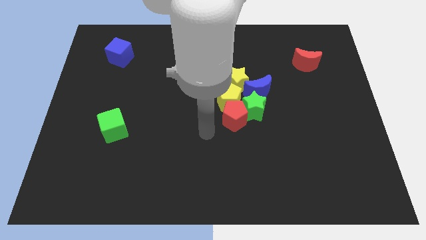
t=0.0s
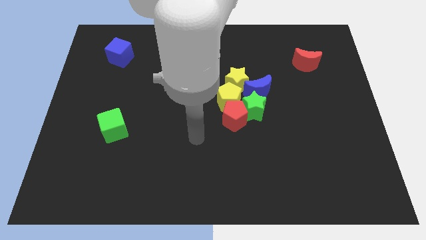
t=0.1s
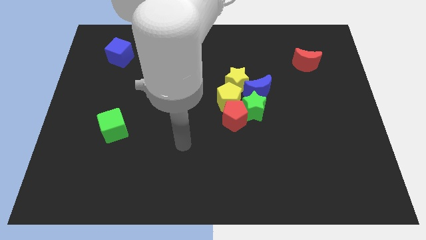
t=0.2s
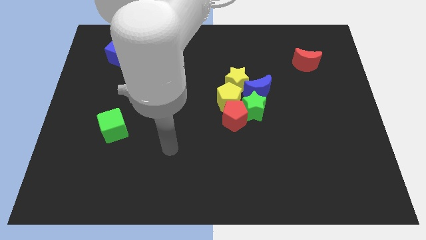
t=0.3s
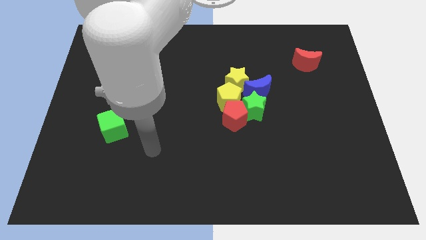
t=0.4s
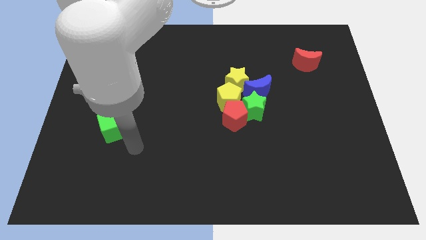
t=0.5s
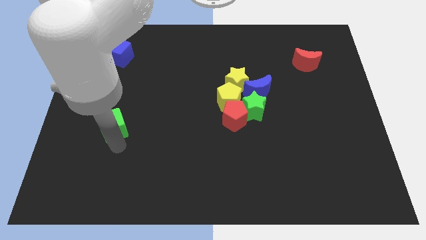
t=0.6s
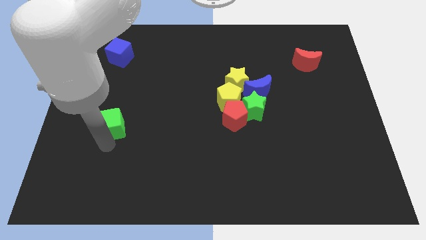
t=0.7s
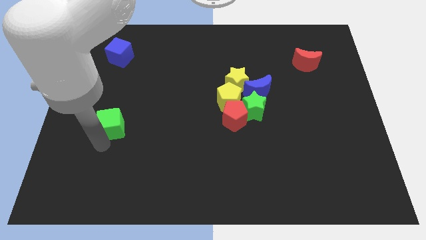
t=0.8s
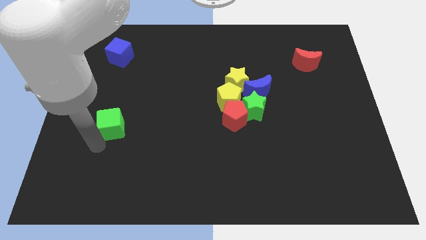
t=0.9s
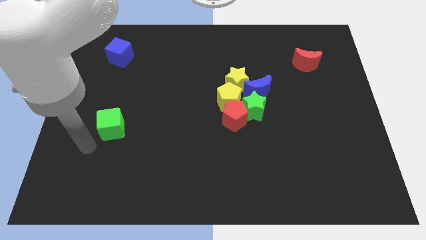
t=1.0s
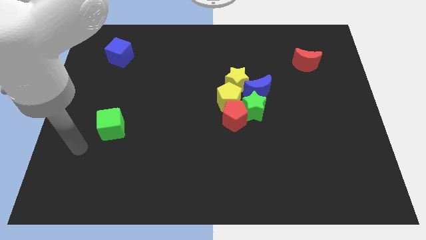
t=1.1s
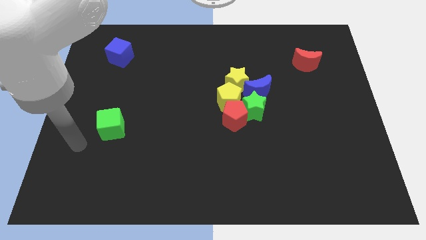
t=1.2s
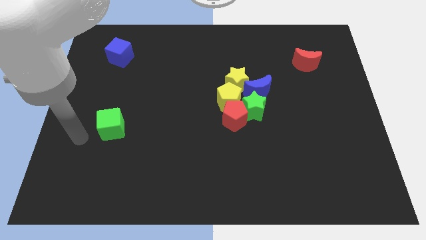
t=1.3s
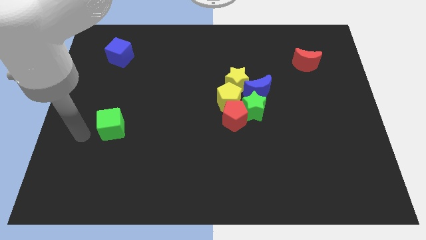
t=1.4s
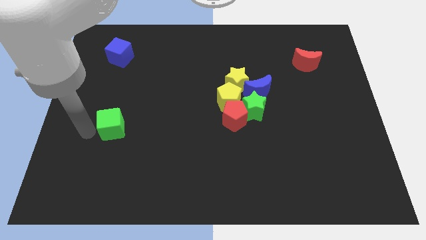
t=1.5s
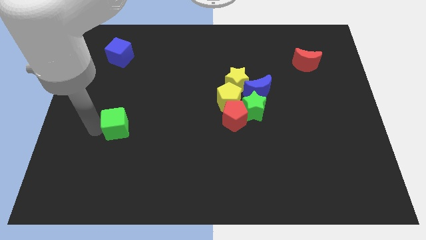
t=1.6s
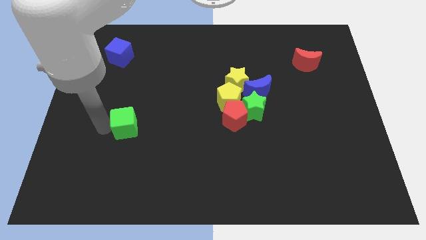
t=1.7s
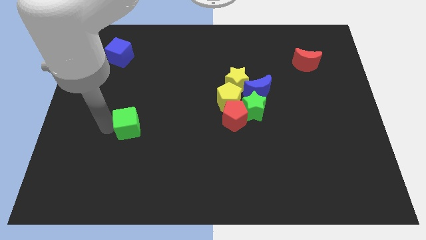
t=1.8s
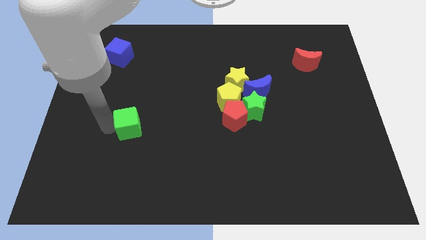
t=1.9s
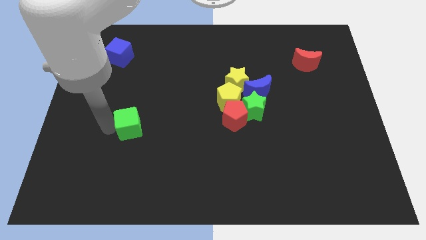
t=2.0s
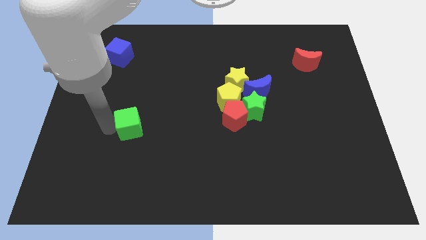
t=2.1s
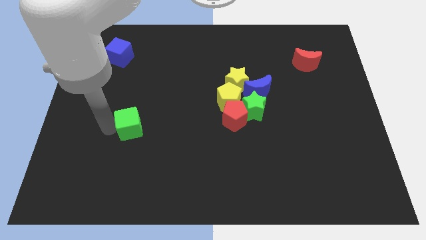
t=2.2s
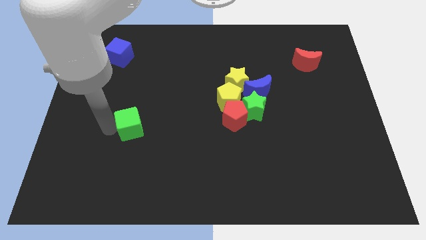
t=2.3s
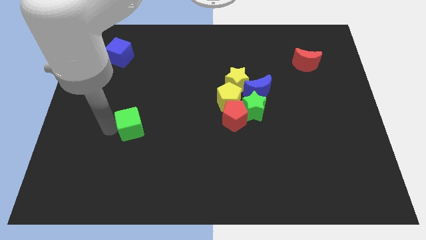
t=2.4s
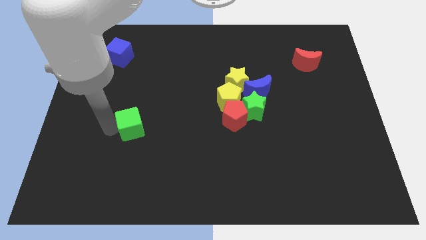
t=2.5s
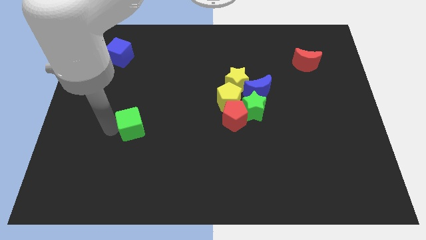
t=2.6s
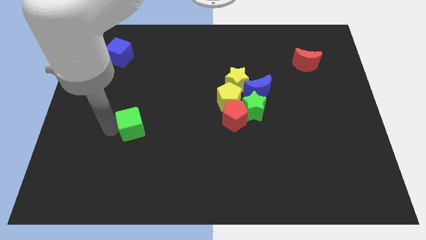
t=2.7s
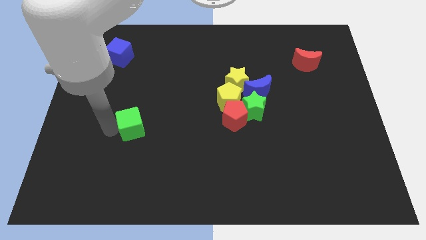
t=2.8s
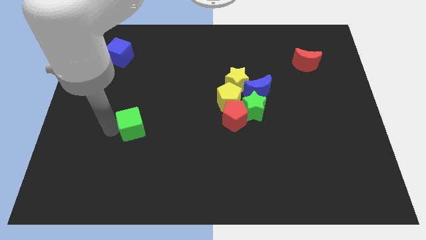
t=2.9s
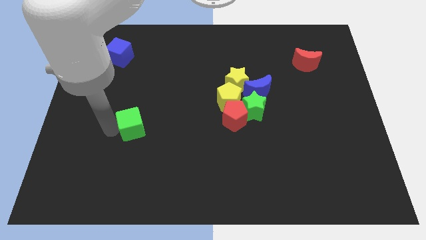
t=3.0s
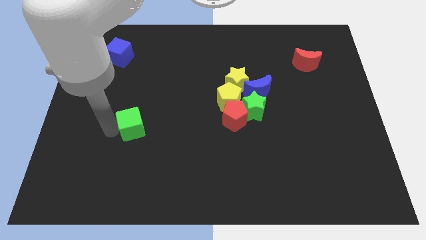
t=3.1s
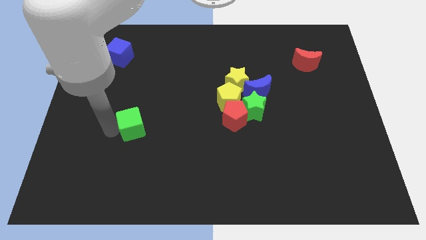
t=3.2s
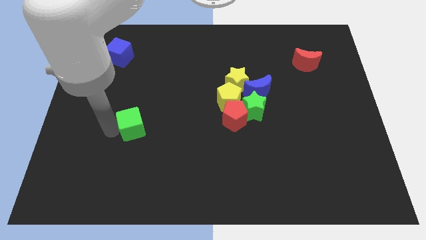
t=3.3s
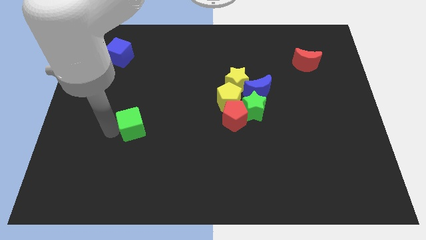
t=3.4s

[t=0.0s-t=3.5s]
move the green cube to right side of the board

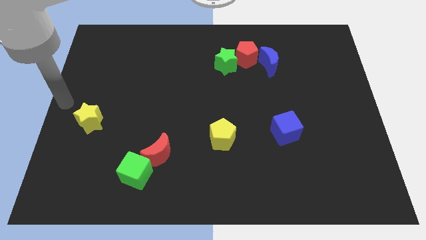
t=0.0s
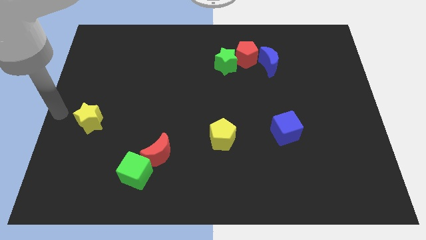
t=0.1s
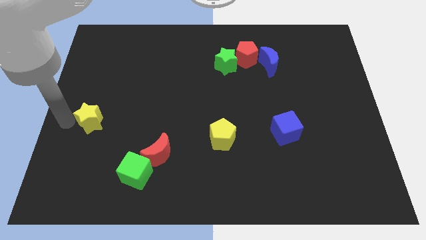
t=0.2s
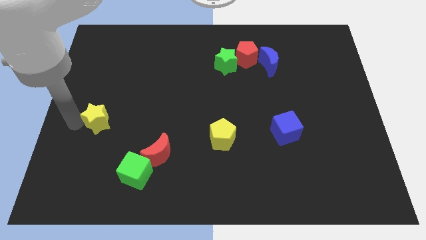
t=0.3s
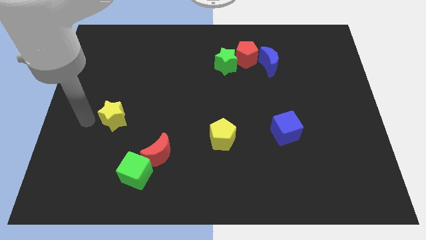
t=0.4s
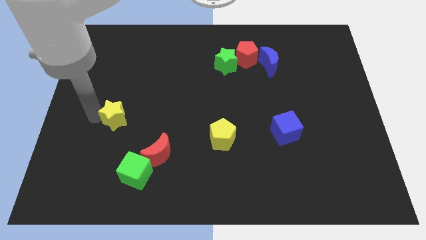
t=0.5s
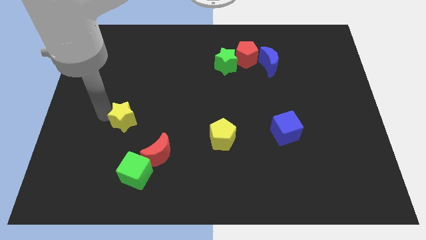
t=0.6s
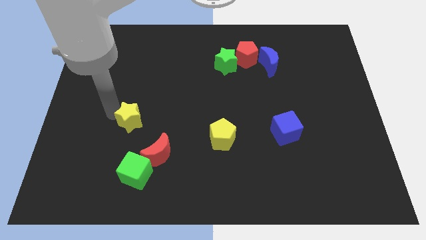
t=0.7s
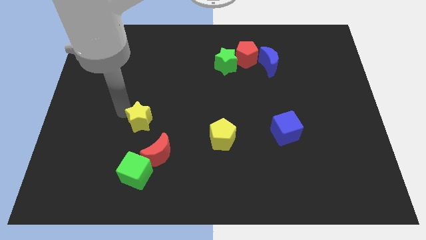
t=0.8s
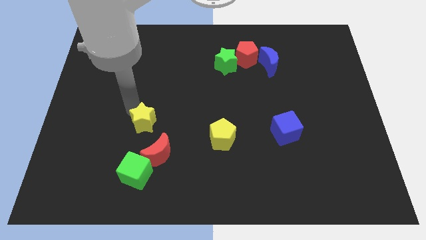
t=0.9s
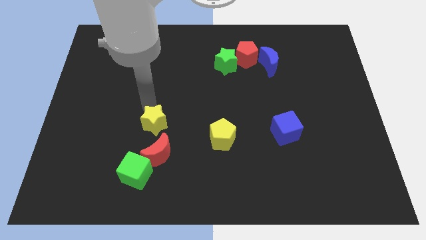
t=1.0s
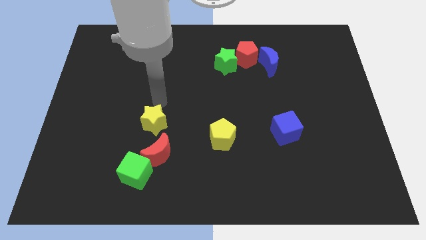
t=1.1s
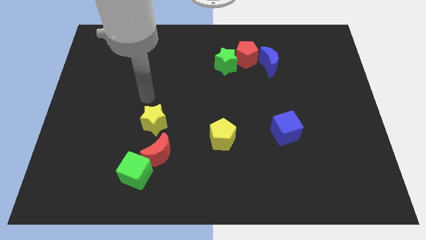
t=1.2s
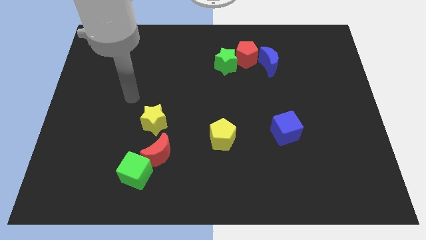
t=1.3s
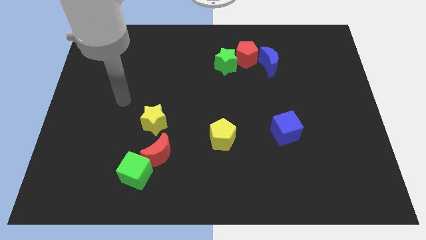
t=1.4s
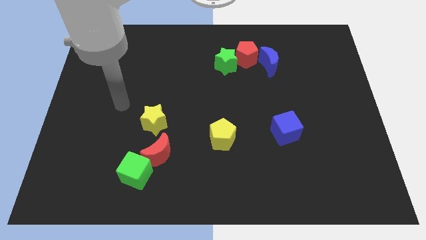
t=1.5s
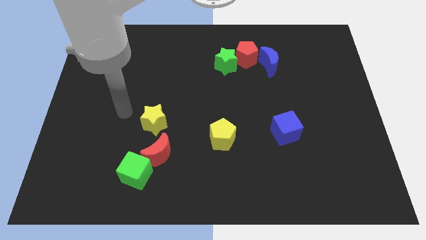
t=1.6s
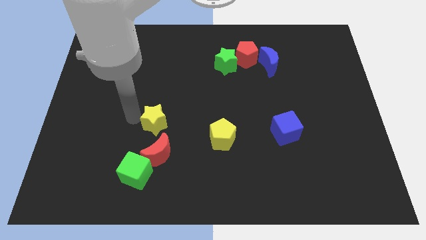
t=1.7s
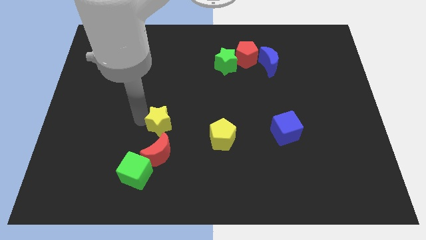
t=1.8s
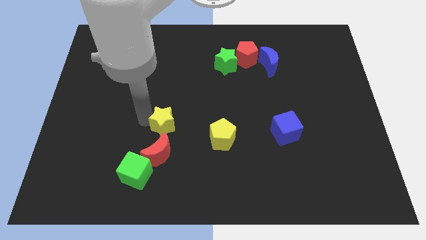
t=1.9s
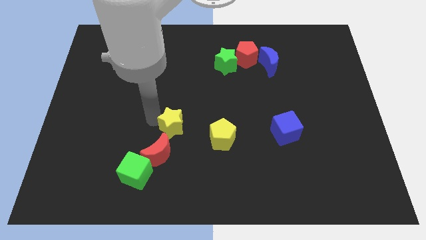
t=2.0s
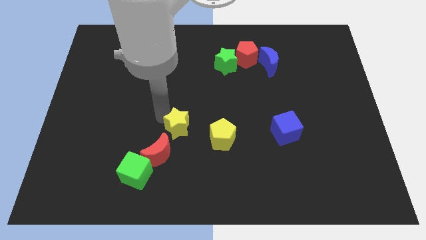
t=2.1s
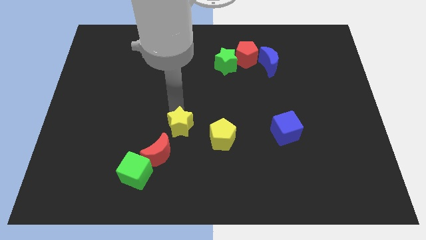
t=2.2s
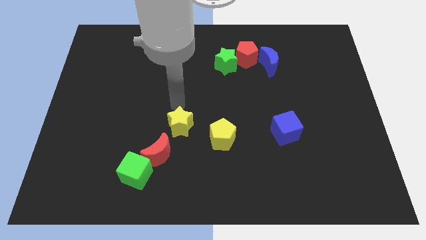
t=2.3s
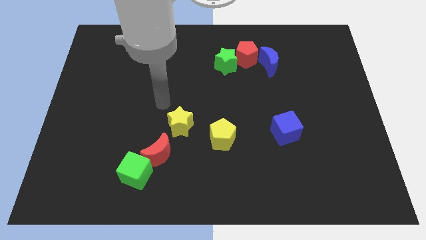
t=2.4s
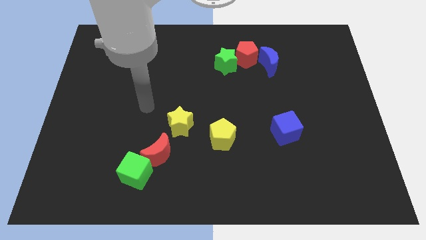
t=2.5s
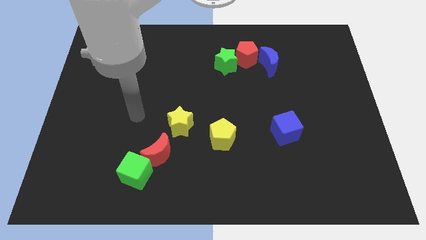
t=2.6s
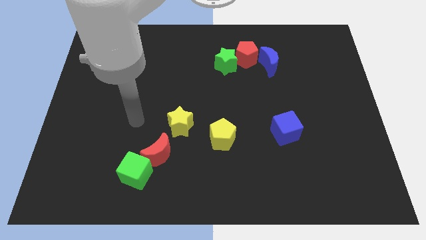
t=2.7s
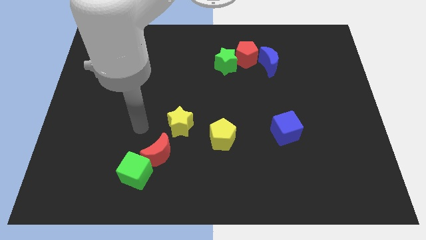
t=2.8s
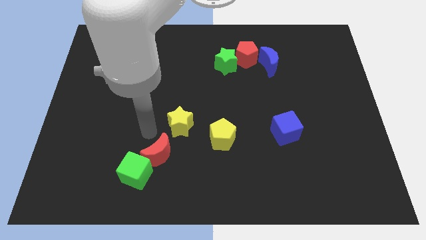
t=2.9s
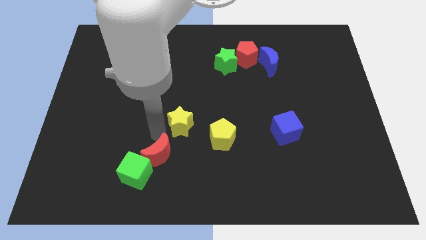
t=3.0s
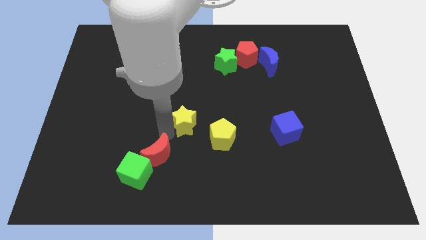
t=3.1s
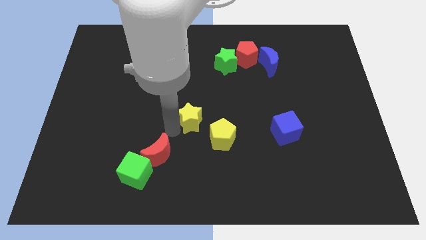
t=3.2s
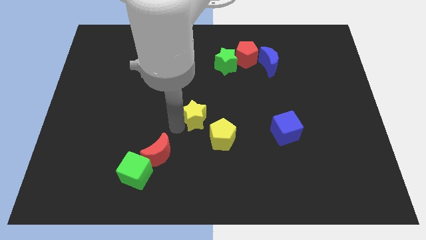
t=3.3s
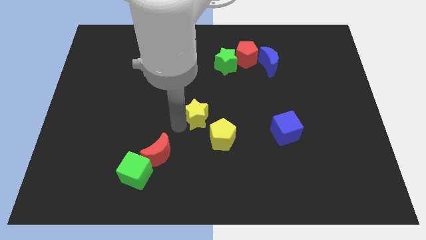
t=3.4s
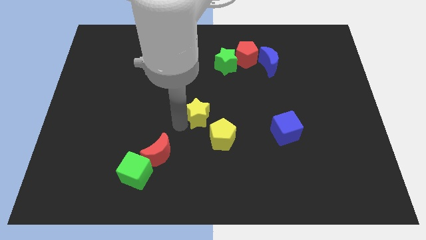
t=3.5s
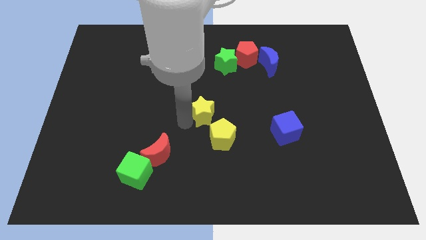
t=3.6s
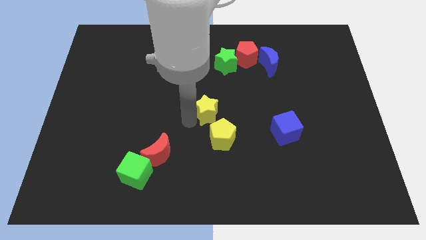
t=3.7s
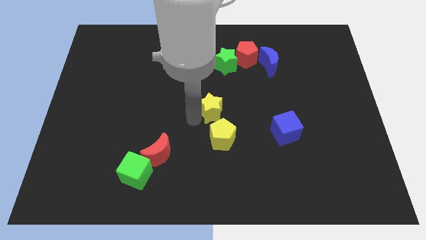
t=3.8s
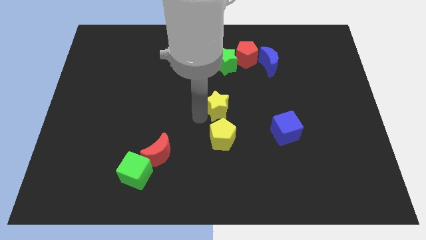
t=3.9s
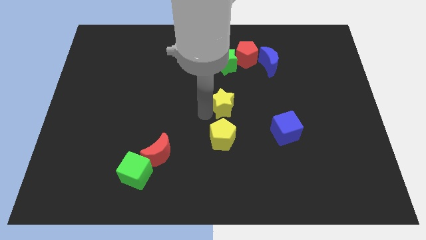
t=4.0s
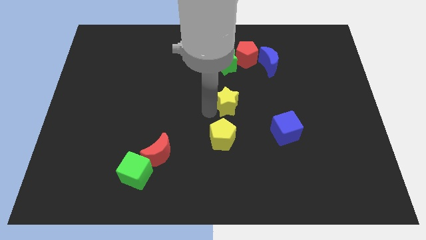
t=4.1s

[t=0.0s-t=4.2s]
place the yellow star in between the green star and yellow pentagon

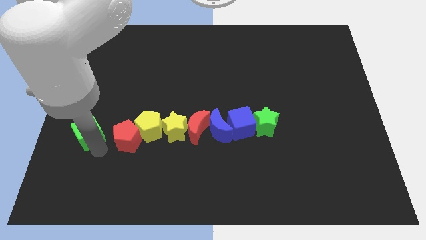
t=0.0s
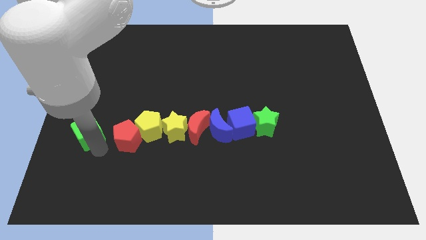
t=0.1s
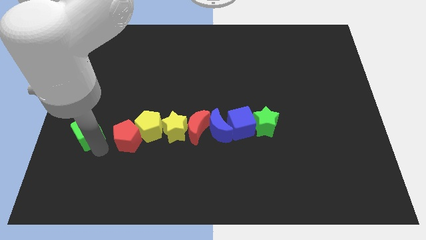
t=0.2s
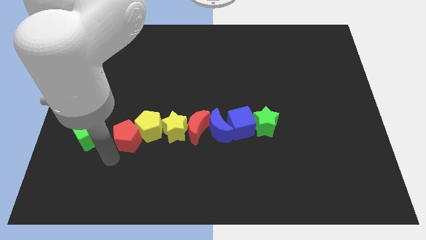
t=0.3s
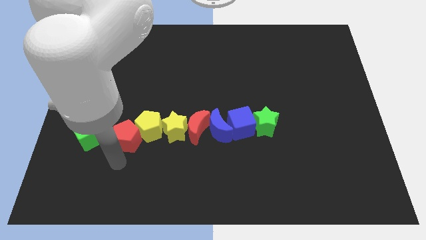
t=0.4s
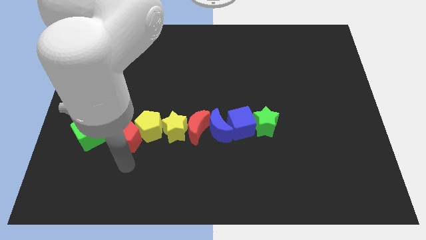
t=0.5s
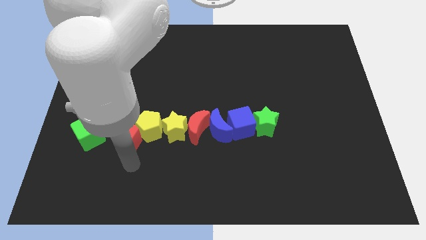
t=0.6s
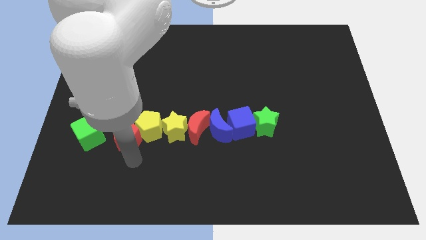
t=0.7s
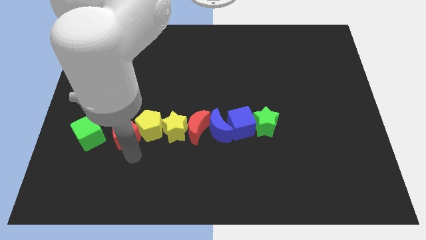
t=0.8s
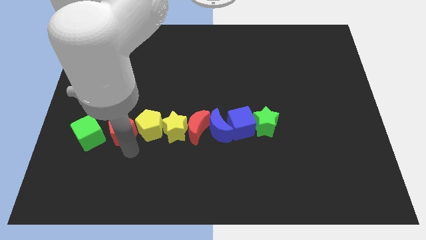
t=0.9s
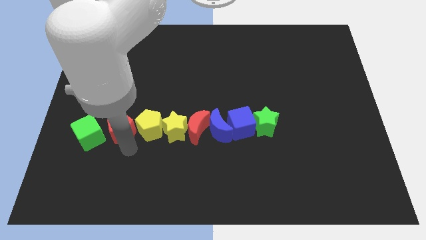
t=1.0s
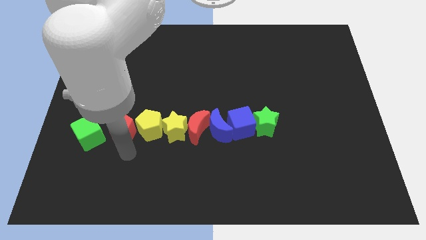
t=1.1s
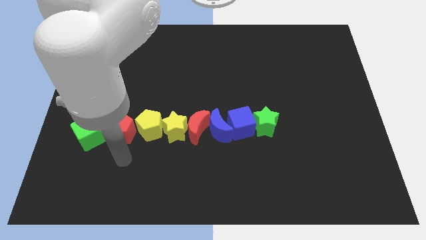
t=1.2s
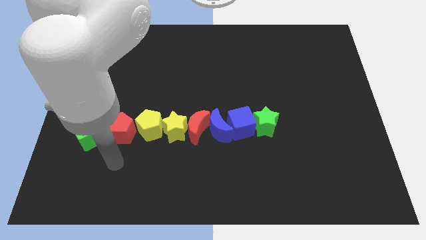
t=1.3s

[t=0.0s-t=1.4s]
move the red pentagon to the left of the yellow pentagon
